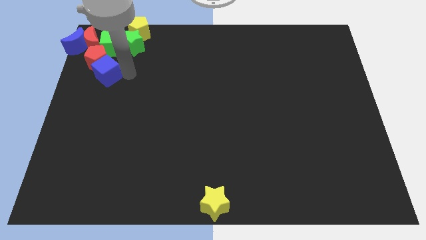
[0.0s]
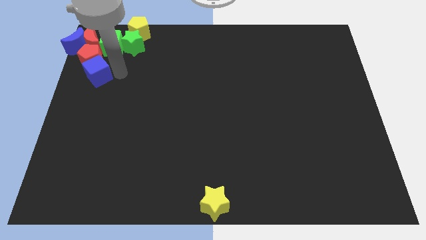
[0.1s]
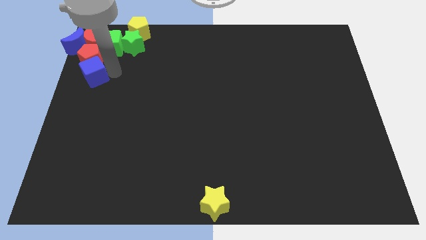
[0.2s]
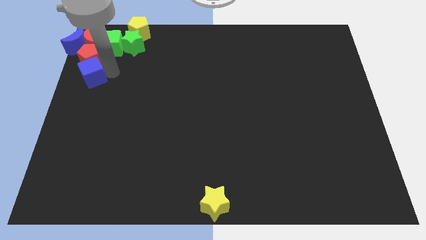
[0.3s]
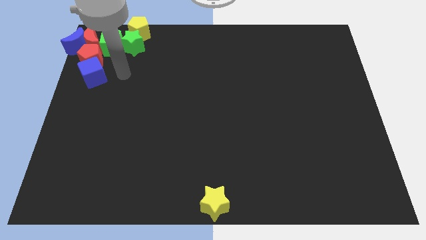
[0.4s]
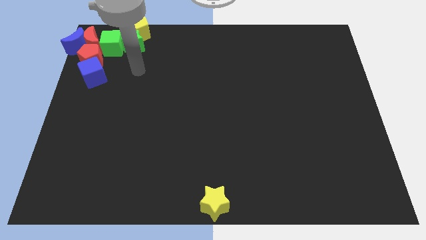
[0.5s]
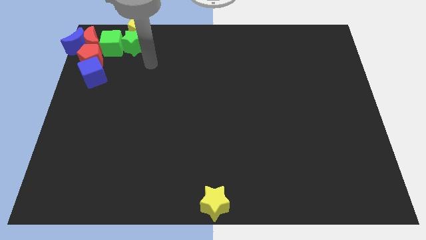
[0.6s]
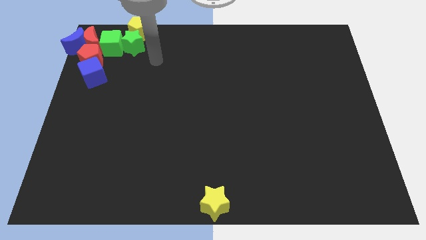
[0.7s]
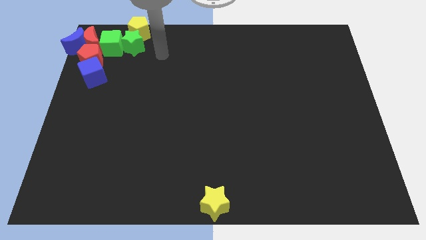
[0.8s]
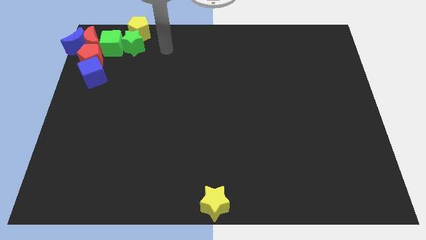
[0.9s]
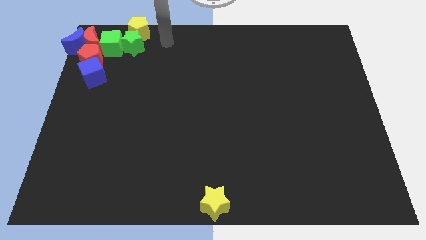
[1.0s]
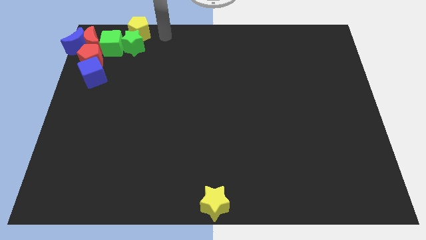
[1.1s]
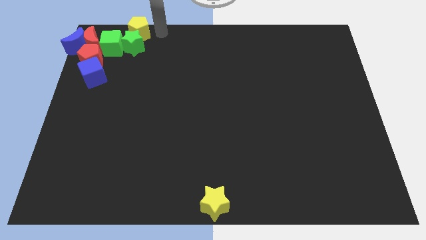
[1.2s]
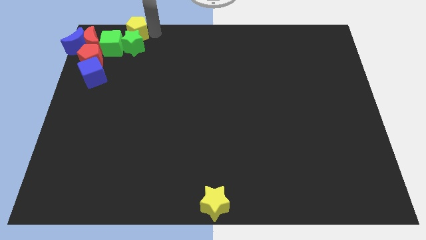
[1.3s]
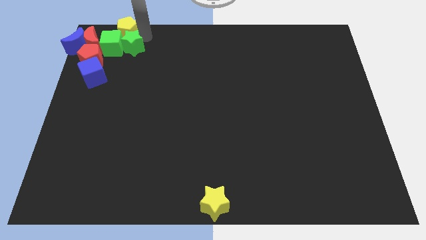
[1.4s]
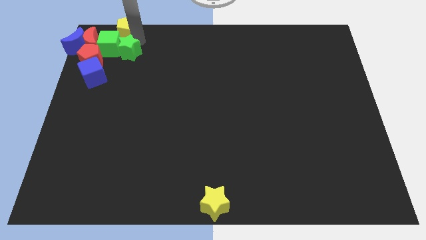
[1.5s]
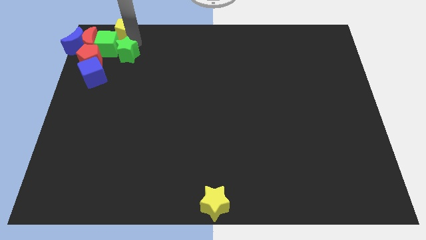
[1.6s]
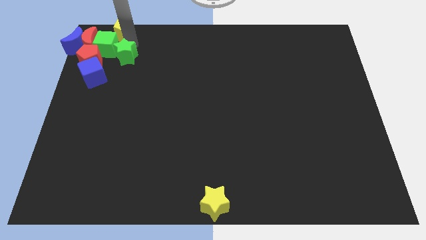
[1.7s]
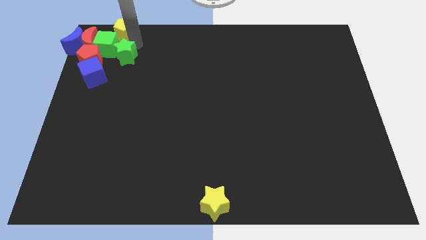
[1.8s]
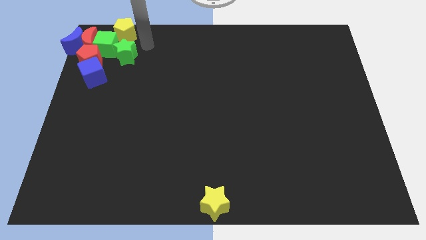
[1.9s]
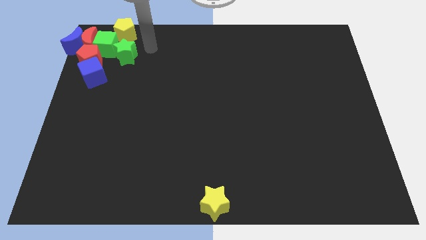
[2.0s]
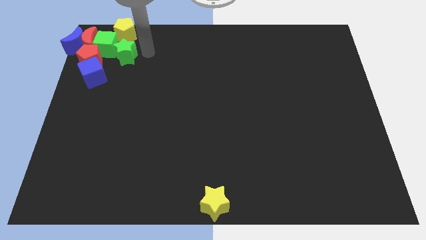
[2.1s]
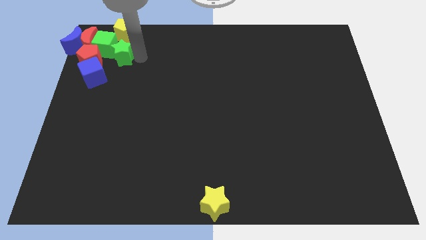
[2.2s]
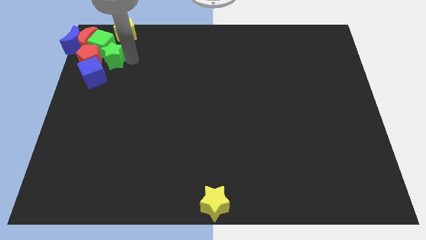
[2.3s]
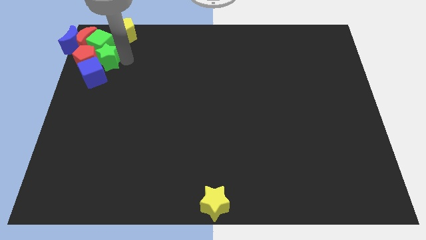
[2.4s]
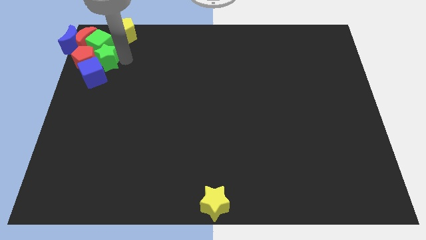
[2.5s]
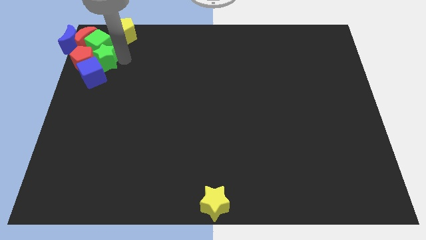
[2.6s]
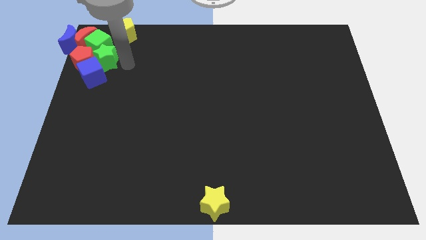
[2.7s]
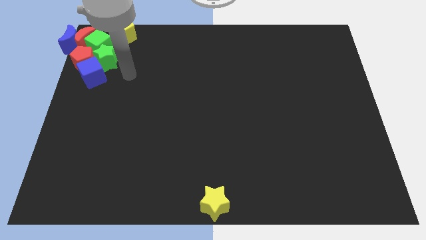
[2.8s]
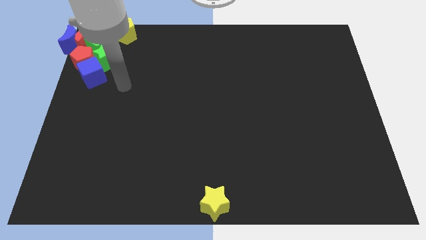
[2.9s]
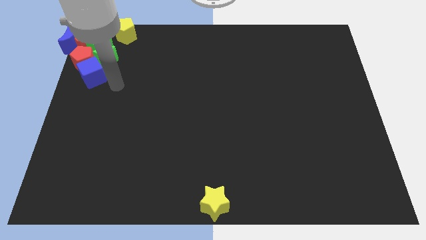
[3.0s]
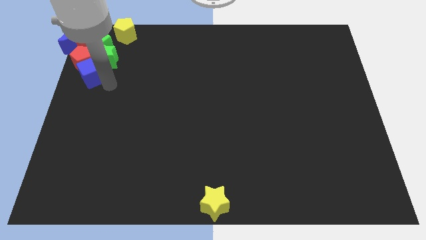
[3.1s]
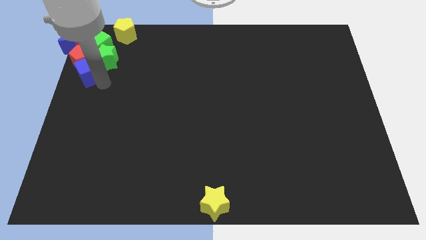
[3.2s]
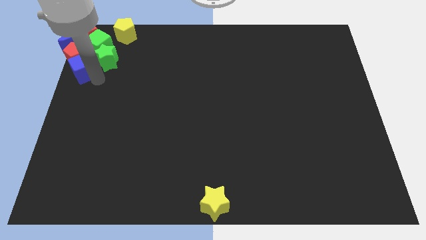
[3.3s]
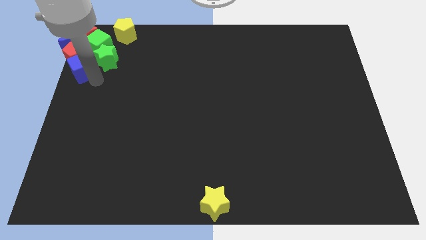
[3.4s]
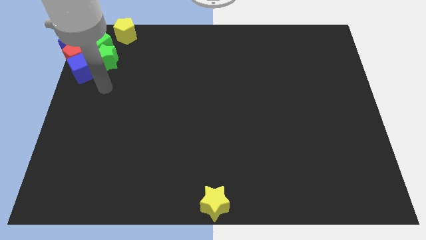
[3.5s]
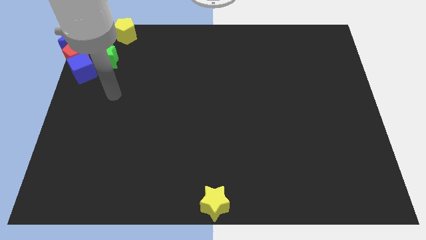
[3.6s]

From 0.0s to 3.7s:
adjust the group of blocks to the top left corner of the board

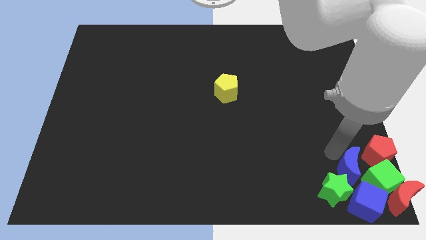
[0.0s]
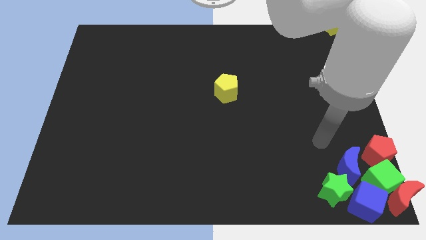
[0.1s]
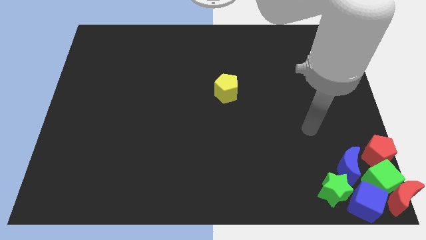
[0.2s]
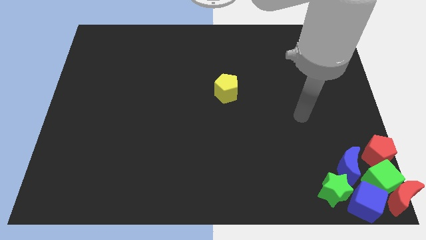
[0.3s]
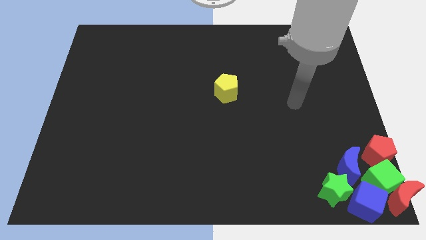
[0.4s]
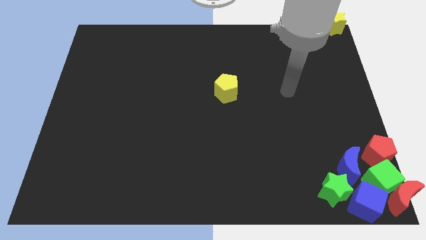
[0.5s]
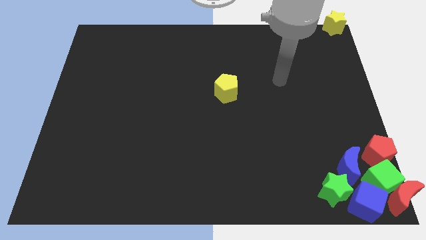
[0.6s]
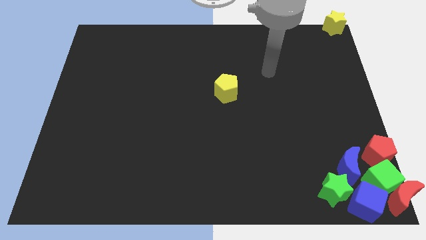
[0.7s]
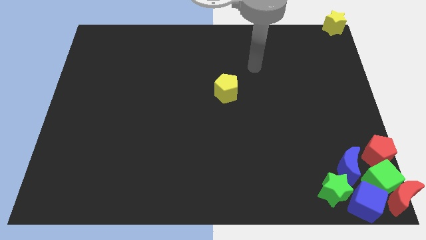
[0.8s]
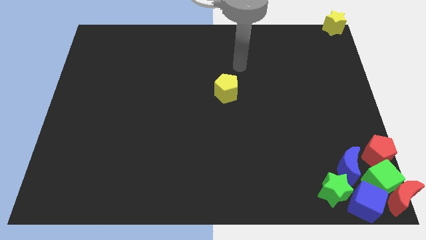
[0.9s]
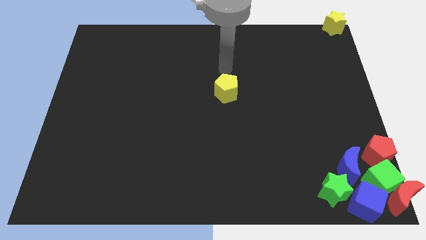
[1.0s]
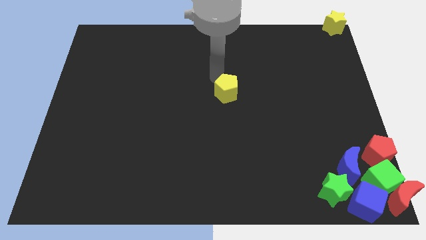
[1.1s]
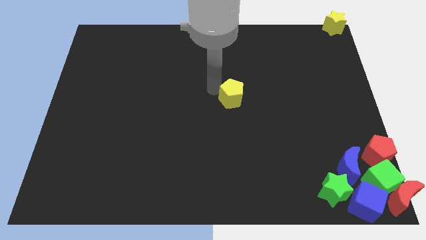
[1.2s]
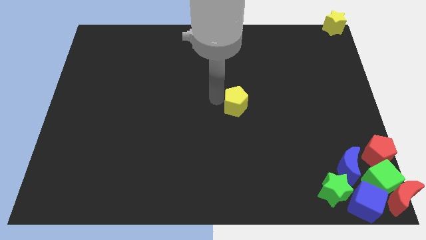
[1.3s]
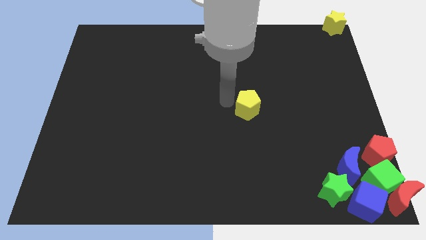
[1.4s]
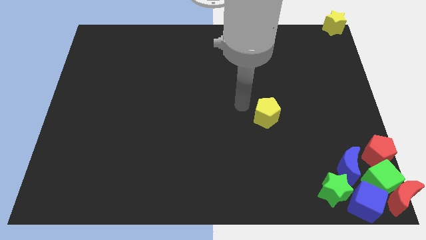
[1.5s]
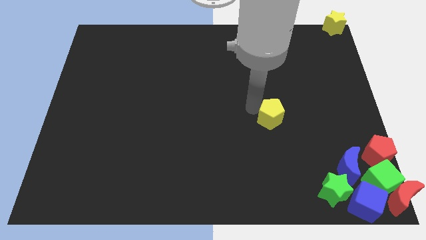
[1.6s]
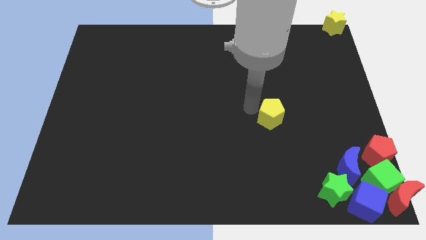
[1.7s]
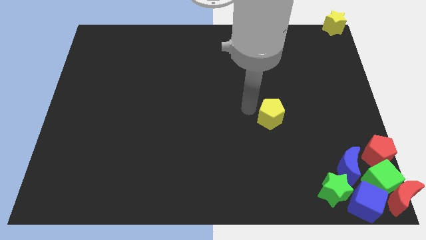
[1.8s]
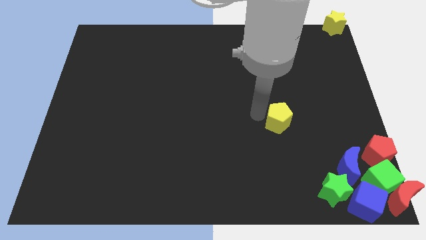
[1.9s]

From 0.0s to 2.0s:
push the yellow pentagon towards the group of blocks at the bottom right corner of the board

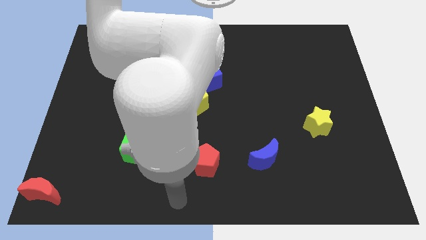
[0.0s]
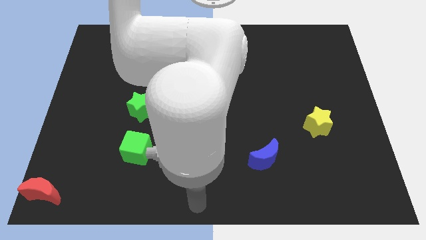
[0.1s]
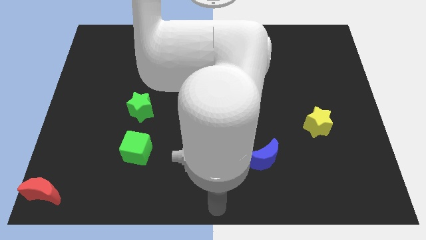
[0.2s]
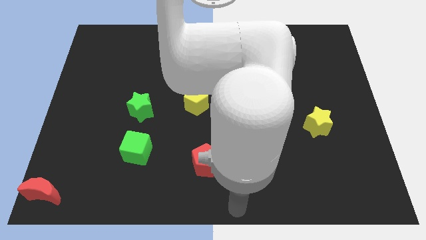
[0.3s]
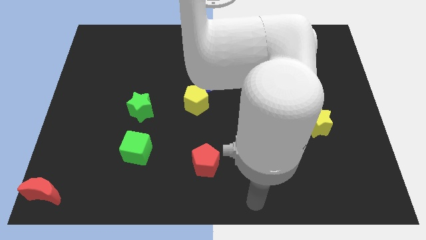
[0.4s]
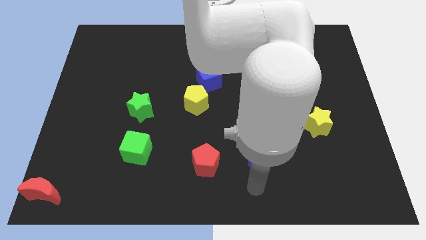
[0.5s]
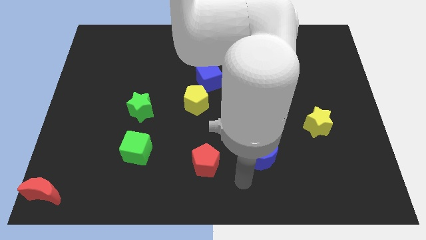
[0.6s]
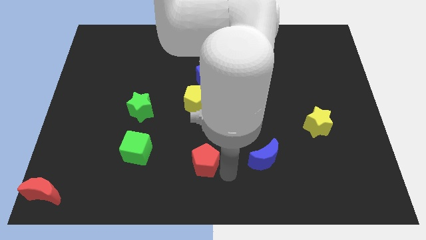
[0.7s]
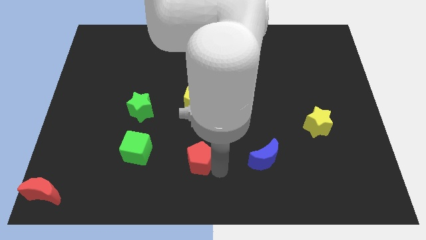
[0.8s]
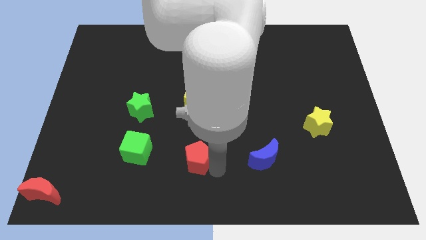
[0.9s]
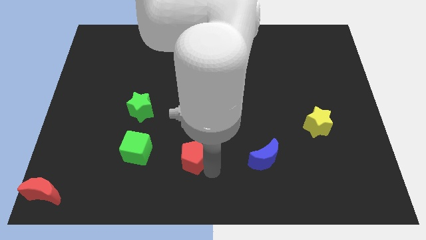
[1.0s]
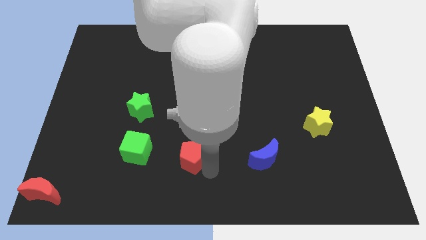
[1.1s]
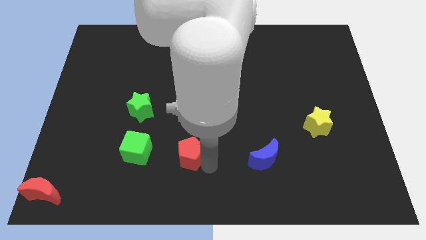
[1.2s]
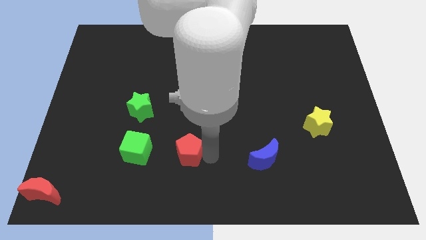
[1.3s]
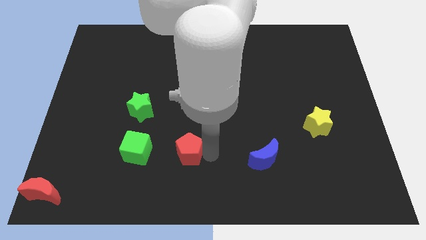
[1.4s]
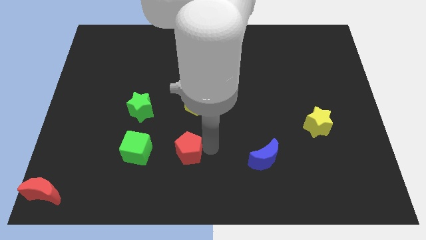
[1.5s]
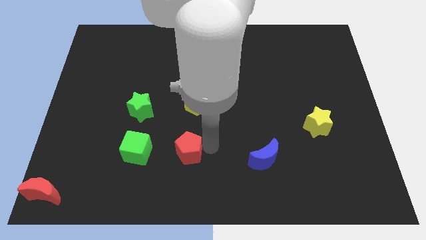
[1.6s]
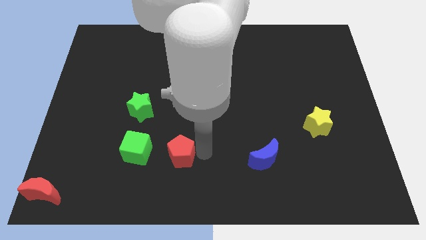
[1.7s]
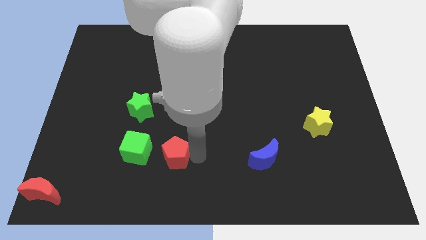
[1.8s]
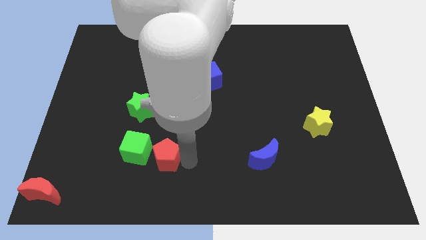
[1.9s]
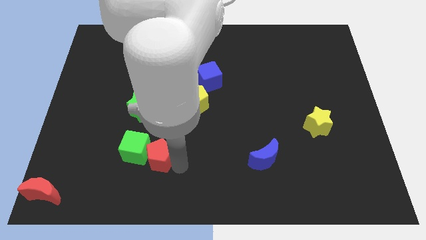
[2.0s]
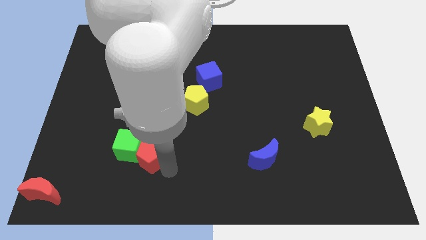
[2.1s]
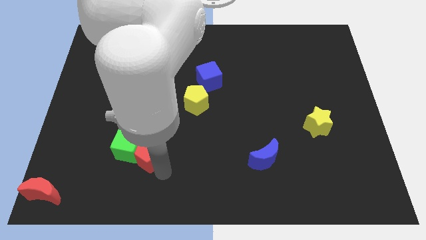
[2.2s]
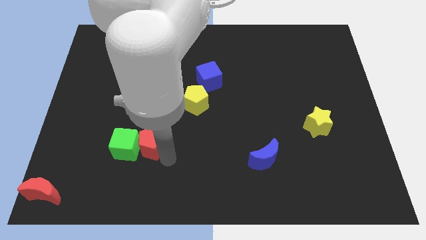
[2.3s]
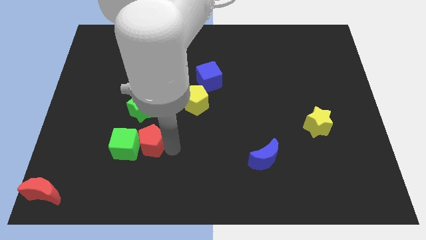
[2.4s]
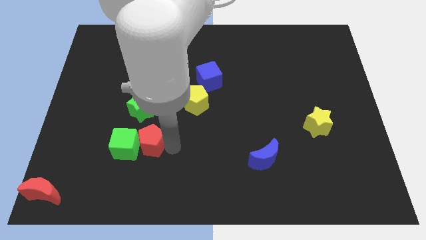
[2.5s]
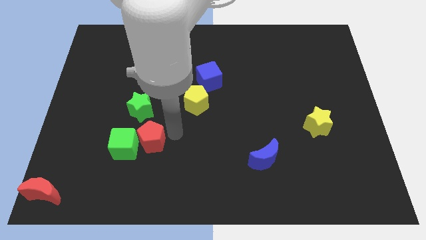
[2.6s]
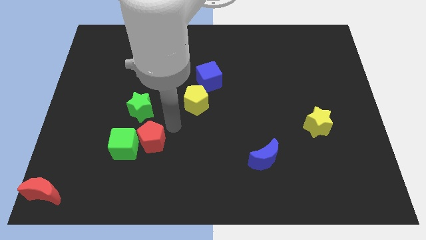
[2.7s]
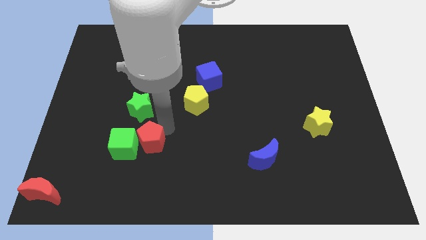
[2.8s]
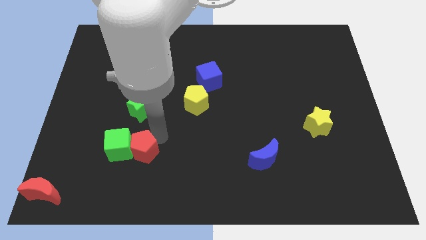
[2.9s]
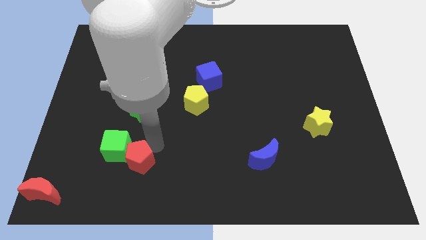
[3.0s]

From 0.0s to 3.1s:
push red pentagon in to green cube
